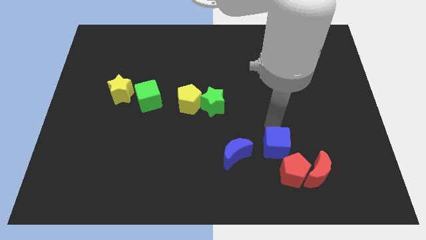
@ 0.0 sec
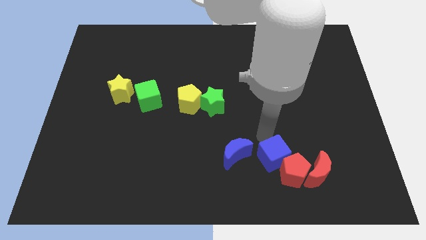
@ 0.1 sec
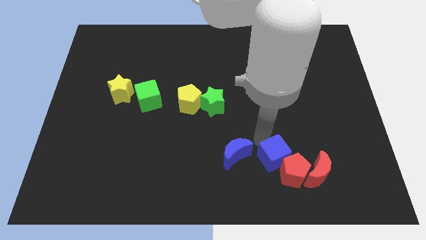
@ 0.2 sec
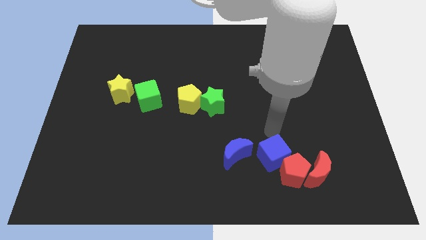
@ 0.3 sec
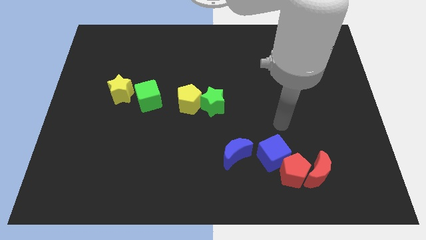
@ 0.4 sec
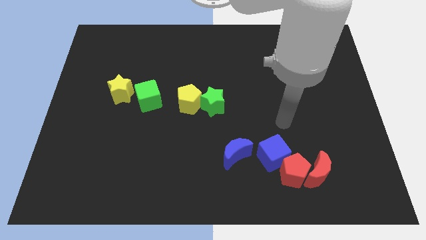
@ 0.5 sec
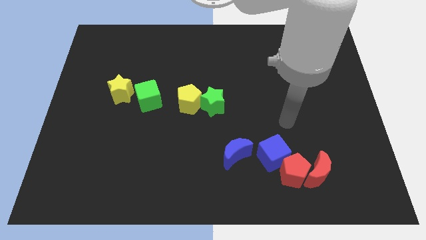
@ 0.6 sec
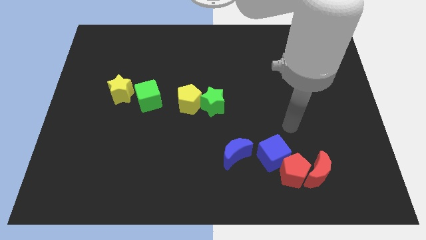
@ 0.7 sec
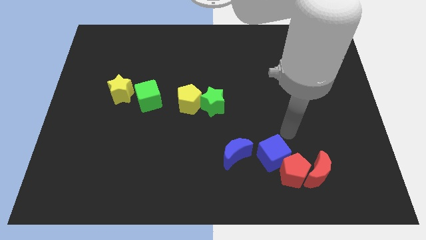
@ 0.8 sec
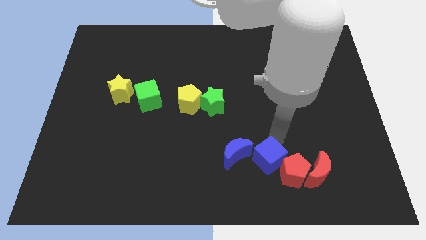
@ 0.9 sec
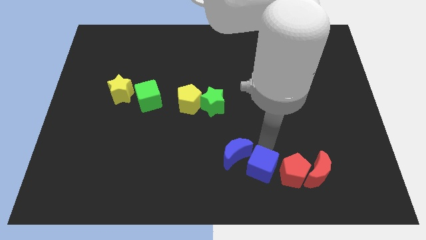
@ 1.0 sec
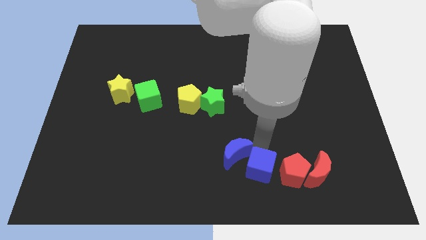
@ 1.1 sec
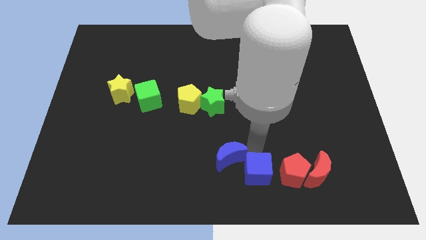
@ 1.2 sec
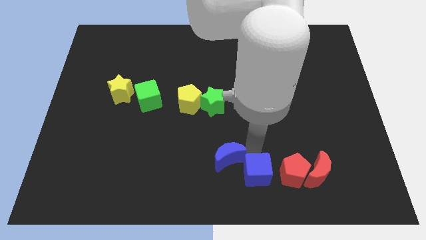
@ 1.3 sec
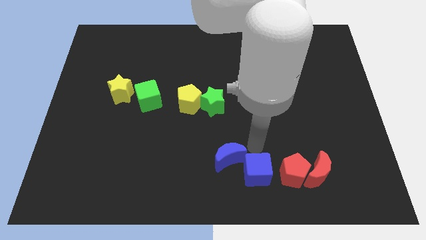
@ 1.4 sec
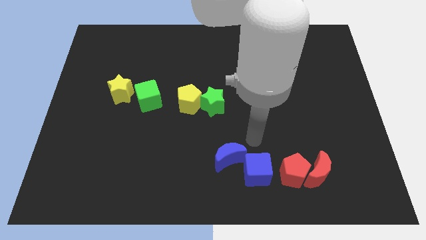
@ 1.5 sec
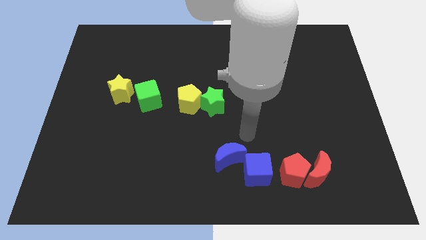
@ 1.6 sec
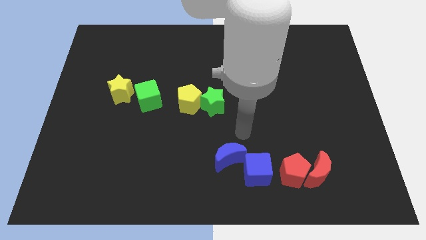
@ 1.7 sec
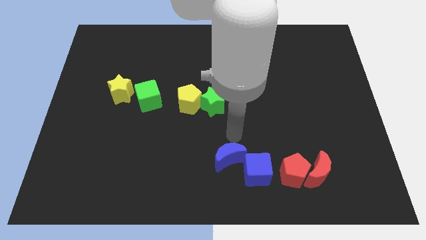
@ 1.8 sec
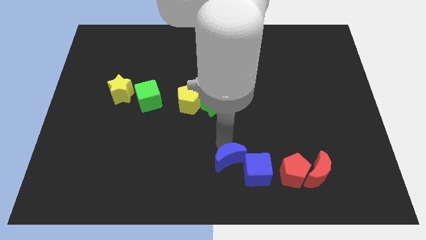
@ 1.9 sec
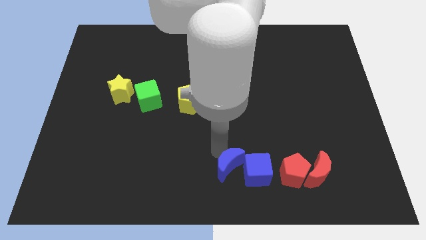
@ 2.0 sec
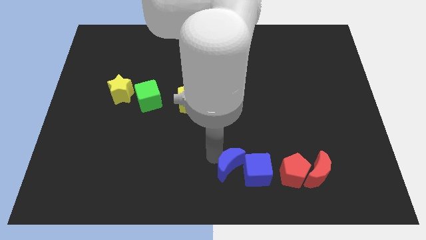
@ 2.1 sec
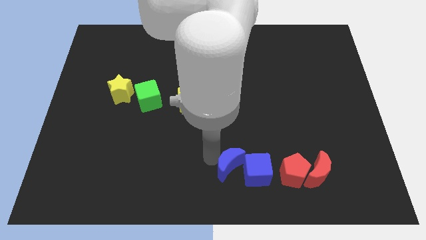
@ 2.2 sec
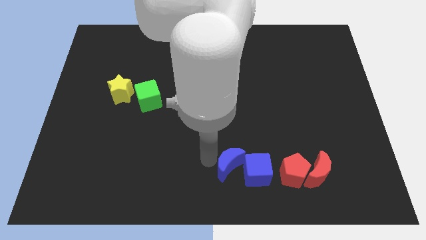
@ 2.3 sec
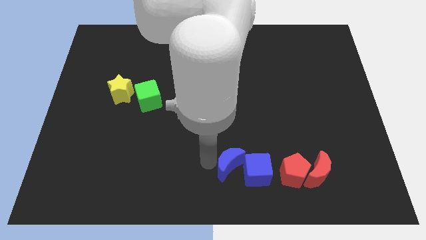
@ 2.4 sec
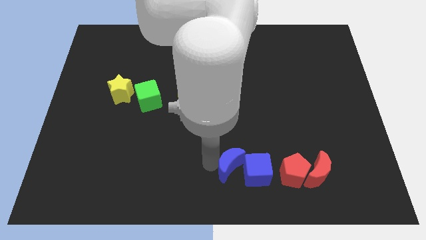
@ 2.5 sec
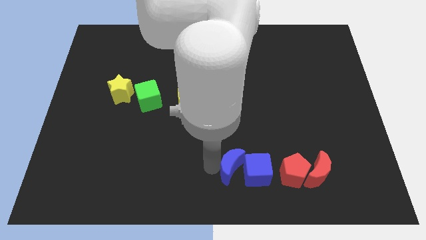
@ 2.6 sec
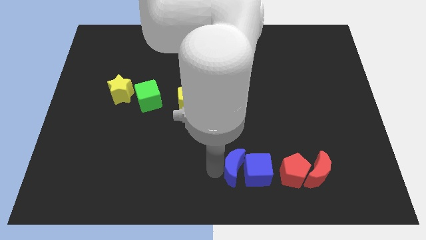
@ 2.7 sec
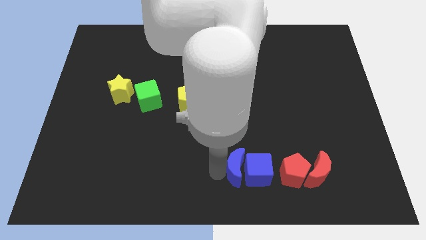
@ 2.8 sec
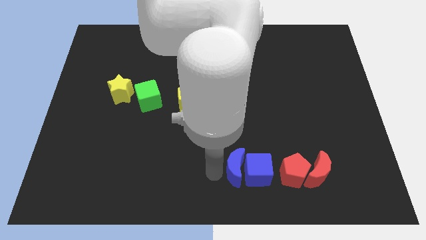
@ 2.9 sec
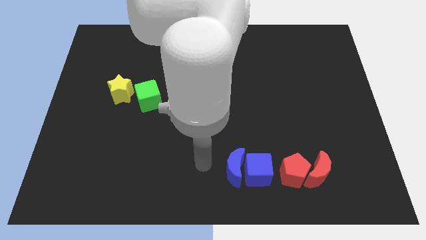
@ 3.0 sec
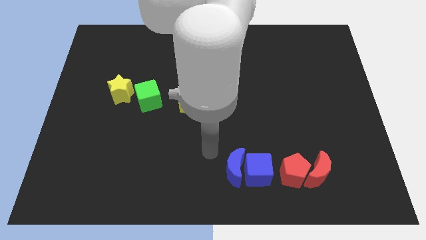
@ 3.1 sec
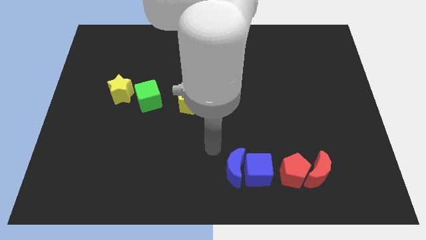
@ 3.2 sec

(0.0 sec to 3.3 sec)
place the blue blocks to the left side of red blocks

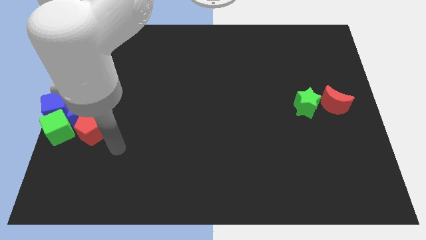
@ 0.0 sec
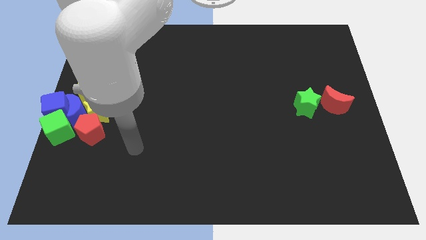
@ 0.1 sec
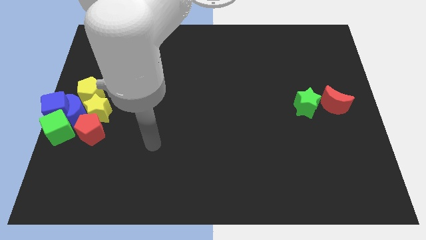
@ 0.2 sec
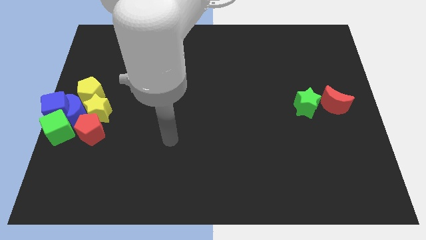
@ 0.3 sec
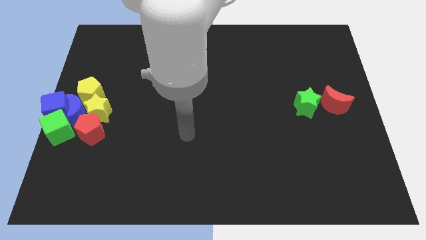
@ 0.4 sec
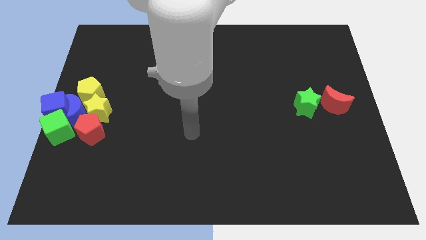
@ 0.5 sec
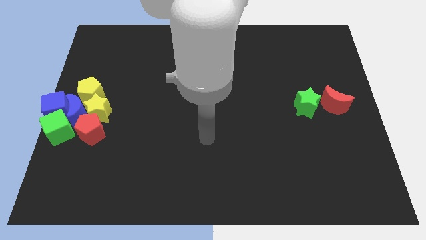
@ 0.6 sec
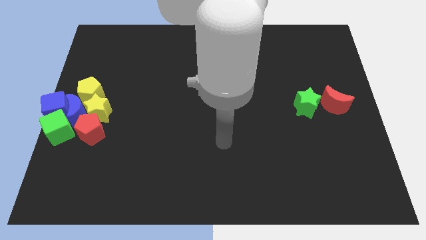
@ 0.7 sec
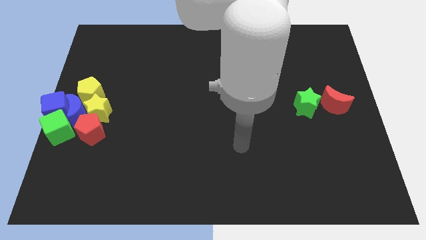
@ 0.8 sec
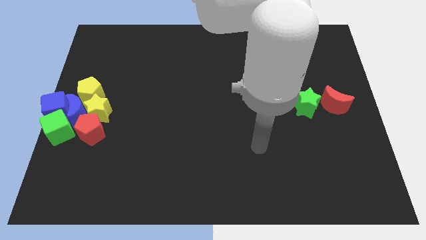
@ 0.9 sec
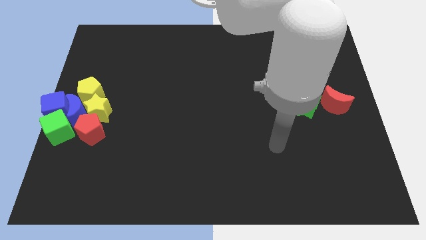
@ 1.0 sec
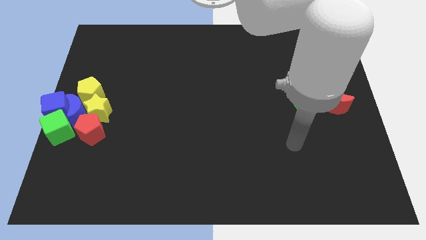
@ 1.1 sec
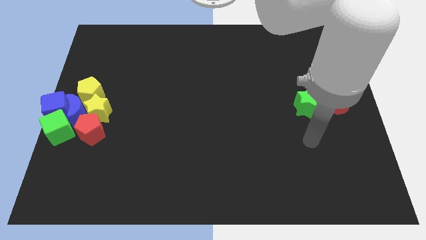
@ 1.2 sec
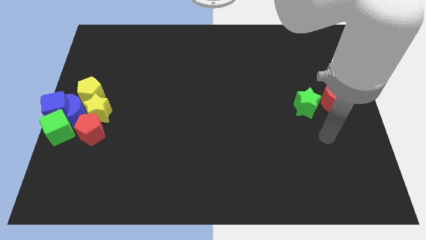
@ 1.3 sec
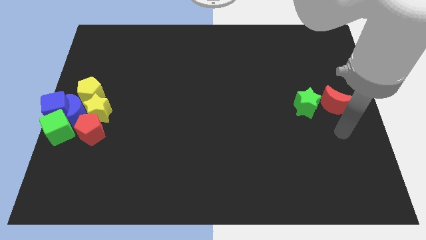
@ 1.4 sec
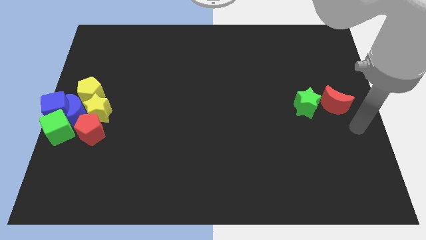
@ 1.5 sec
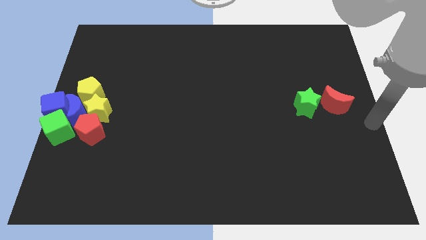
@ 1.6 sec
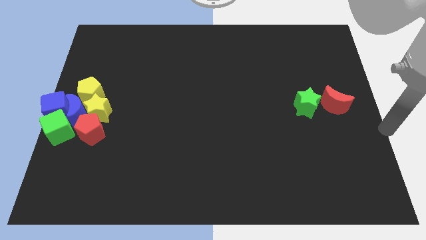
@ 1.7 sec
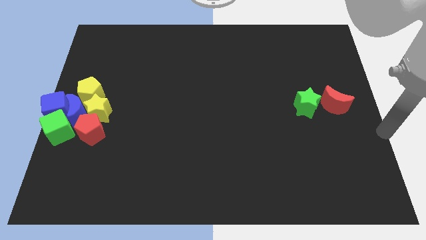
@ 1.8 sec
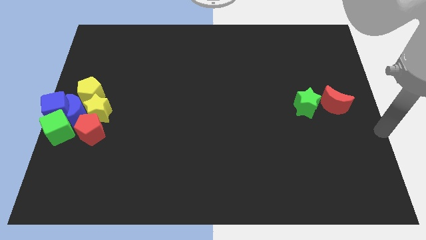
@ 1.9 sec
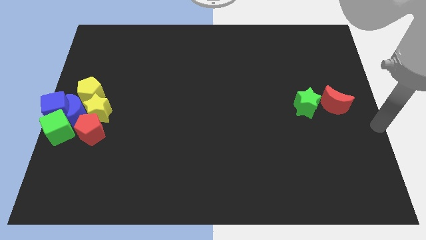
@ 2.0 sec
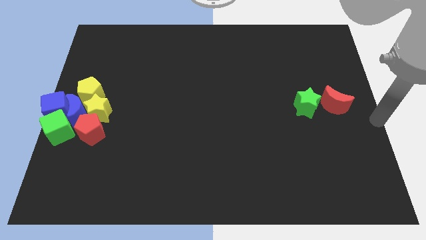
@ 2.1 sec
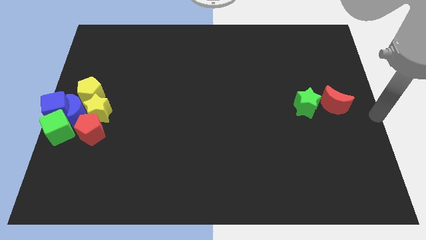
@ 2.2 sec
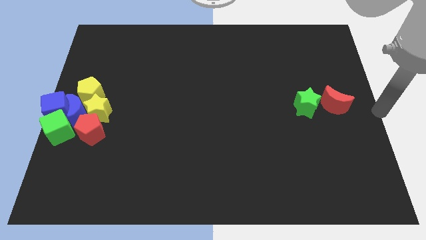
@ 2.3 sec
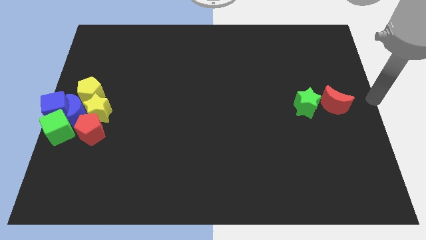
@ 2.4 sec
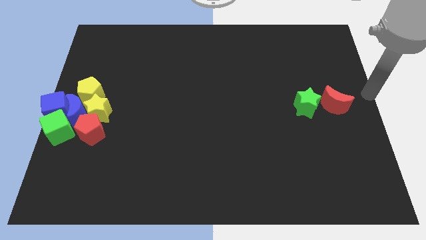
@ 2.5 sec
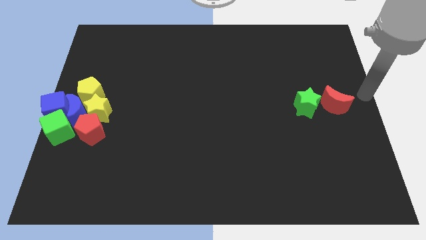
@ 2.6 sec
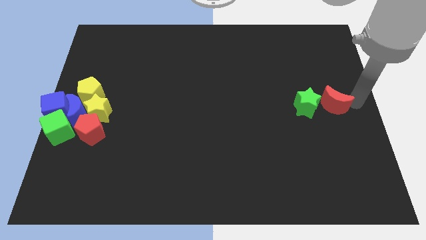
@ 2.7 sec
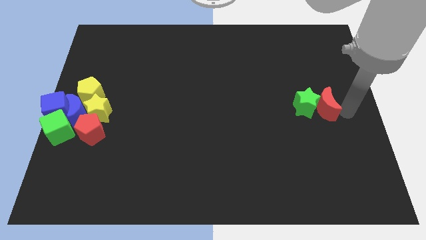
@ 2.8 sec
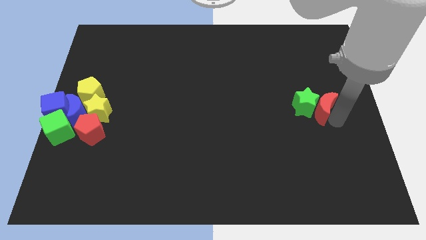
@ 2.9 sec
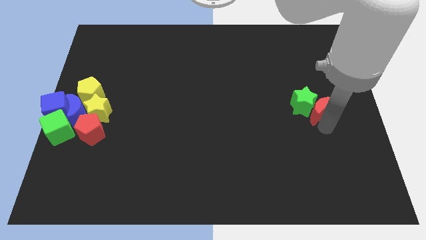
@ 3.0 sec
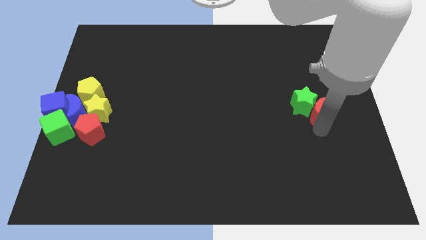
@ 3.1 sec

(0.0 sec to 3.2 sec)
slide the red moon to the bottom right side of the green star

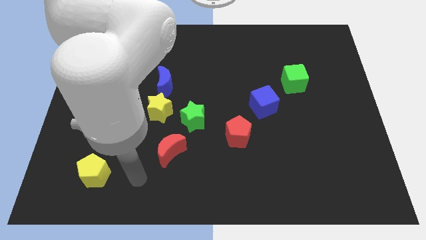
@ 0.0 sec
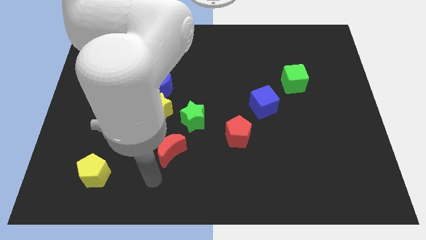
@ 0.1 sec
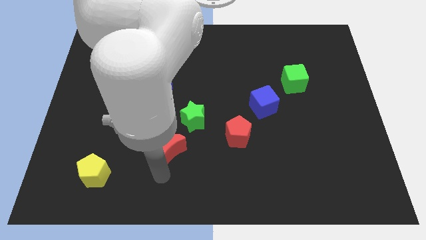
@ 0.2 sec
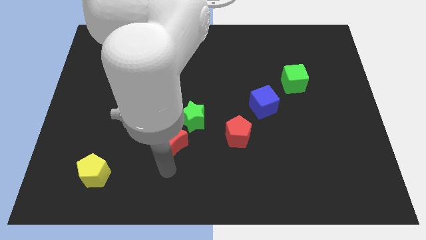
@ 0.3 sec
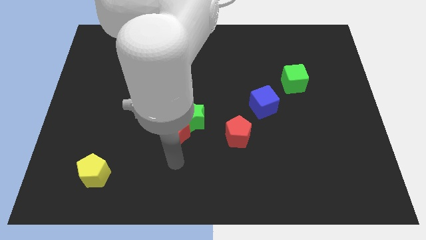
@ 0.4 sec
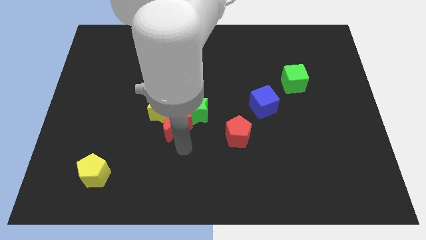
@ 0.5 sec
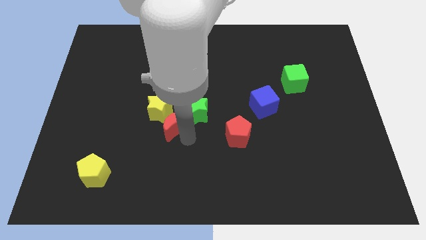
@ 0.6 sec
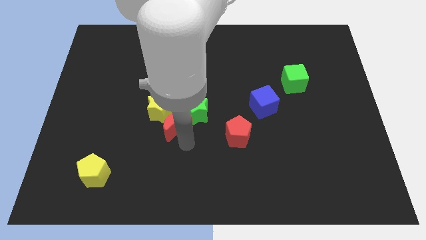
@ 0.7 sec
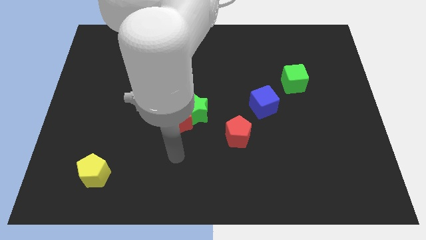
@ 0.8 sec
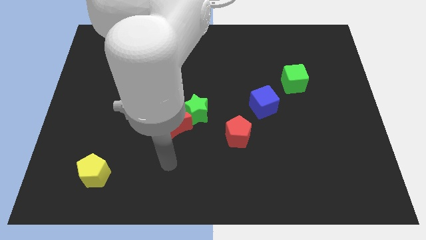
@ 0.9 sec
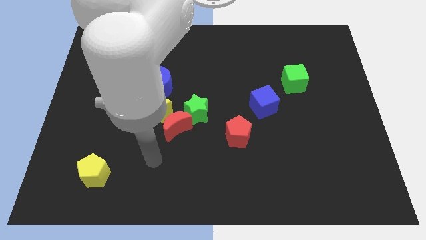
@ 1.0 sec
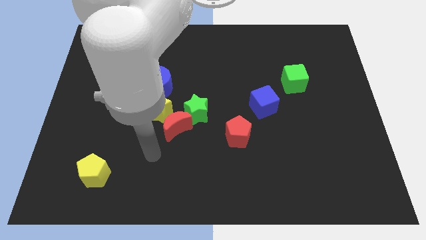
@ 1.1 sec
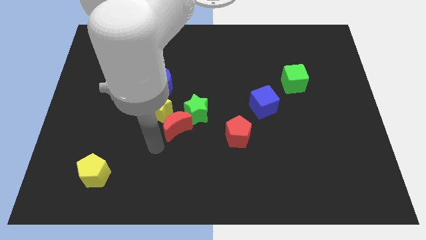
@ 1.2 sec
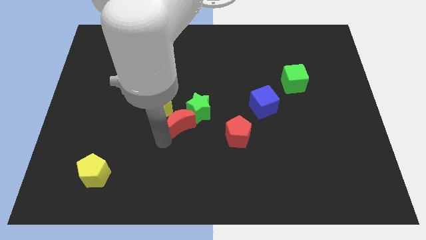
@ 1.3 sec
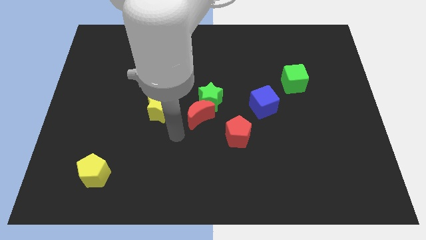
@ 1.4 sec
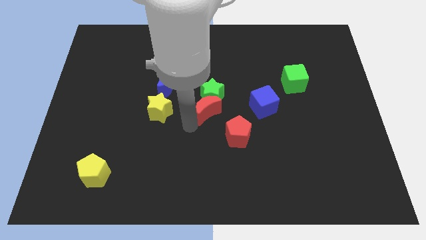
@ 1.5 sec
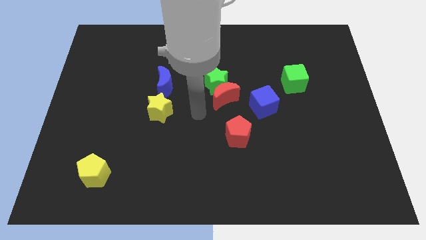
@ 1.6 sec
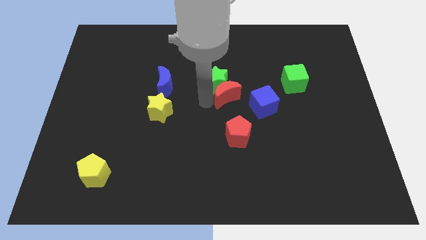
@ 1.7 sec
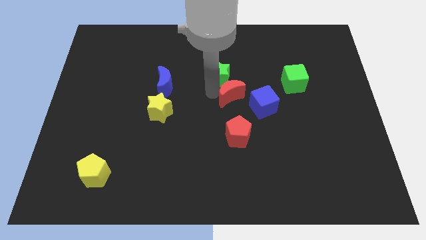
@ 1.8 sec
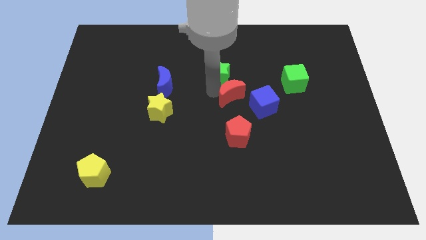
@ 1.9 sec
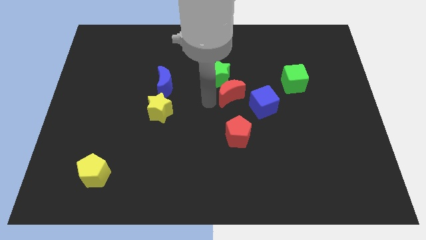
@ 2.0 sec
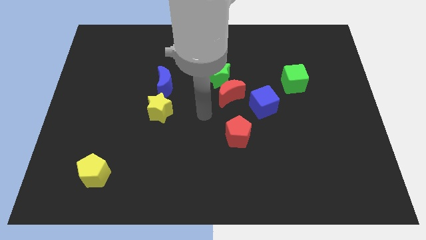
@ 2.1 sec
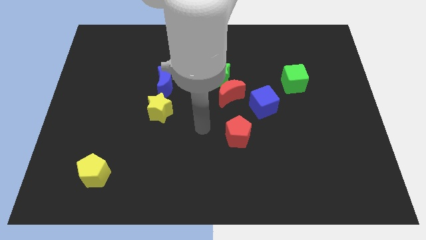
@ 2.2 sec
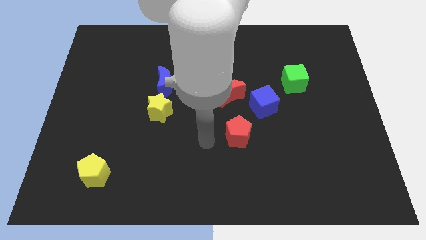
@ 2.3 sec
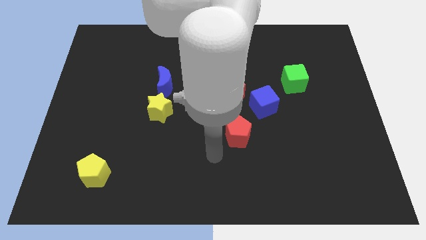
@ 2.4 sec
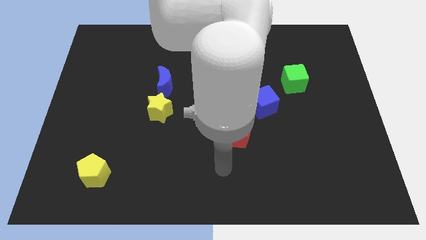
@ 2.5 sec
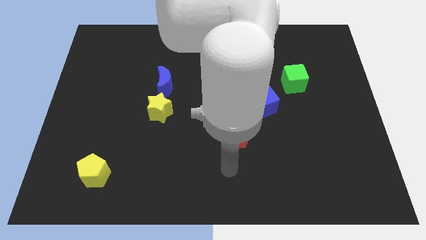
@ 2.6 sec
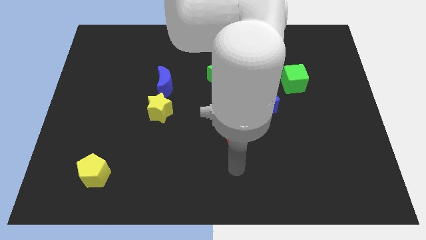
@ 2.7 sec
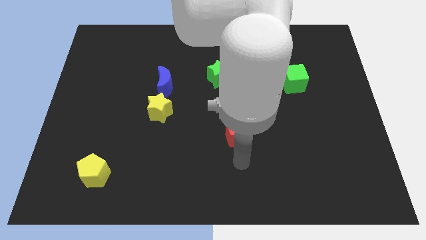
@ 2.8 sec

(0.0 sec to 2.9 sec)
place red pentagon to the center of the board
